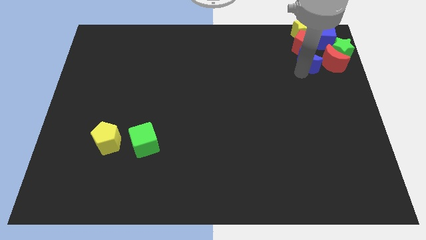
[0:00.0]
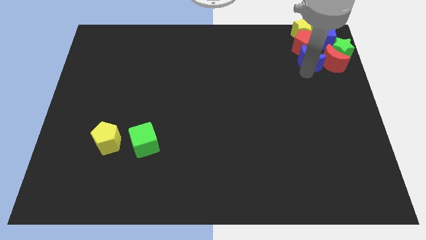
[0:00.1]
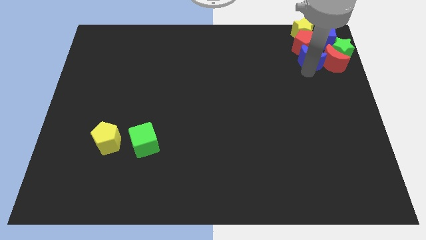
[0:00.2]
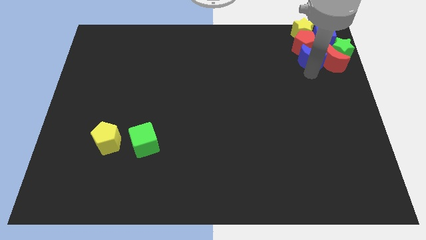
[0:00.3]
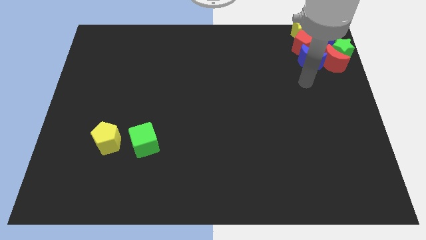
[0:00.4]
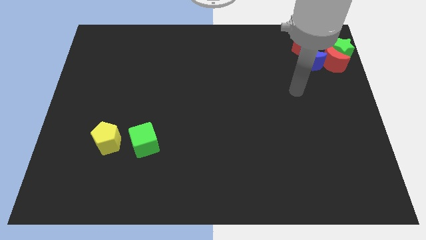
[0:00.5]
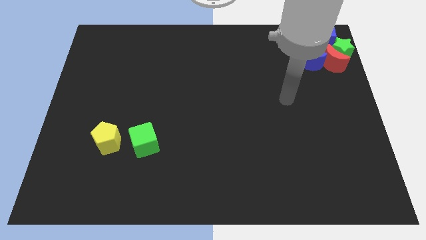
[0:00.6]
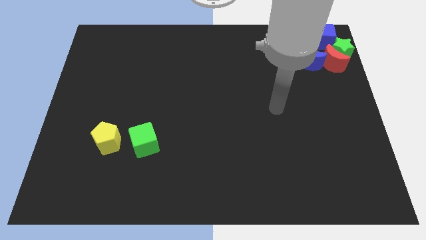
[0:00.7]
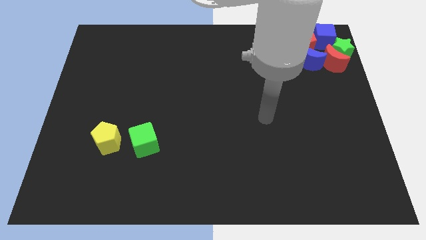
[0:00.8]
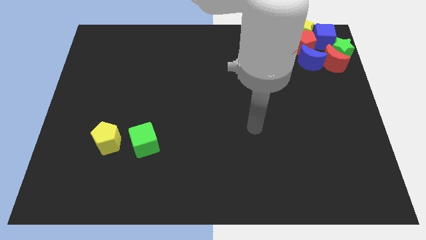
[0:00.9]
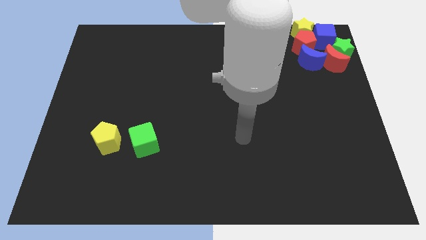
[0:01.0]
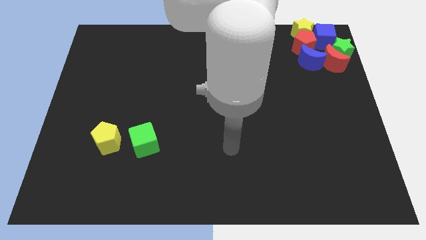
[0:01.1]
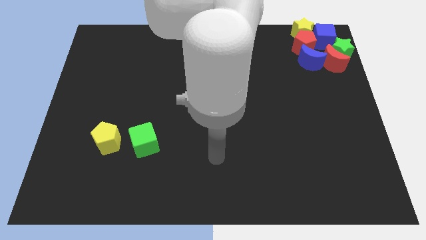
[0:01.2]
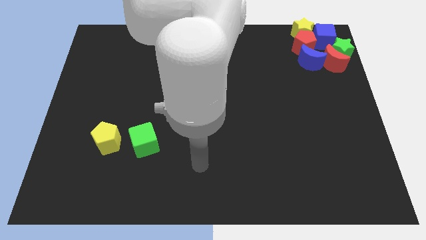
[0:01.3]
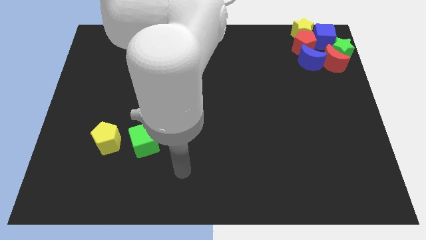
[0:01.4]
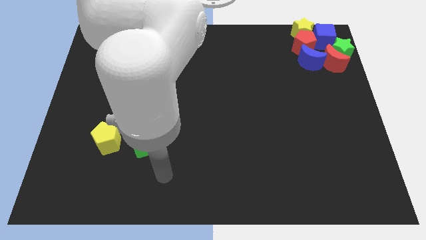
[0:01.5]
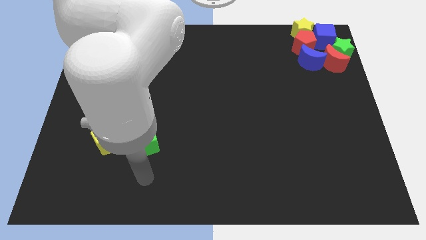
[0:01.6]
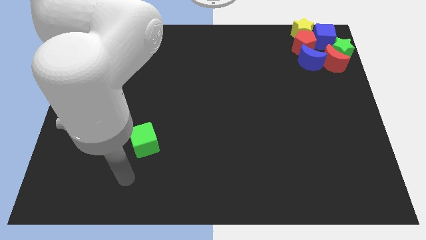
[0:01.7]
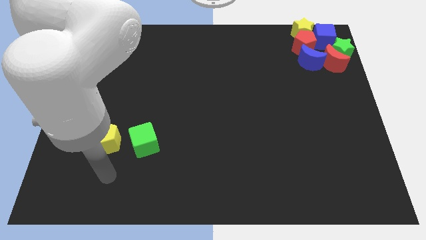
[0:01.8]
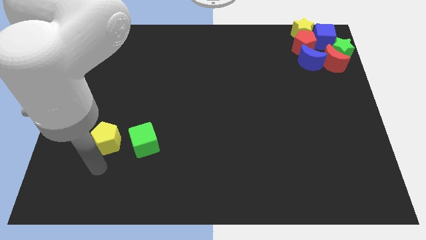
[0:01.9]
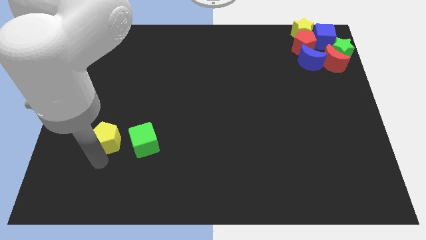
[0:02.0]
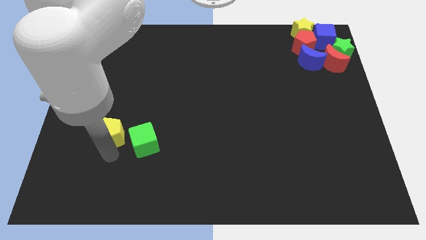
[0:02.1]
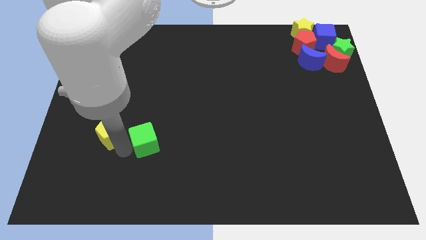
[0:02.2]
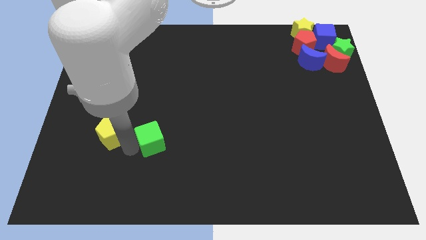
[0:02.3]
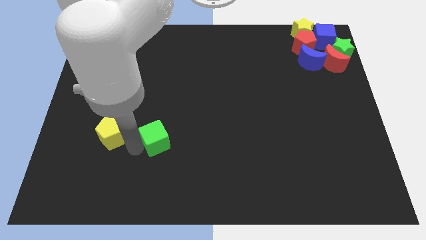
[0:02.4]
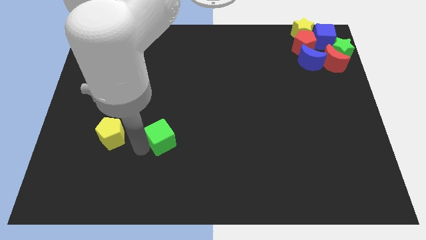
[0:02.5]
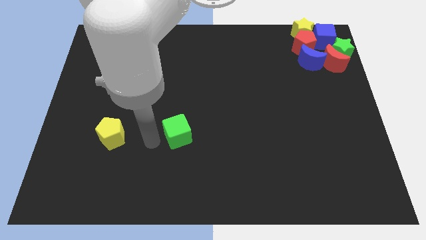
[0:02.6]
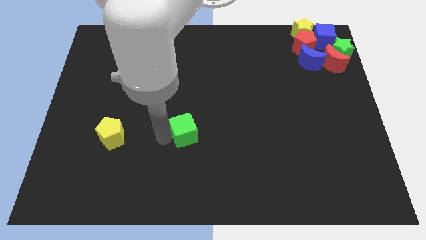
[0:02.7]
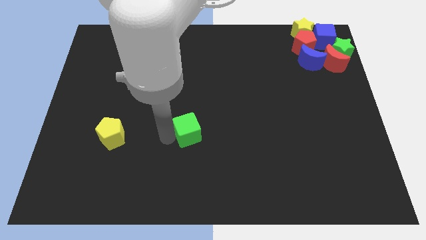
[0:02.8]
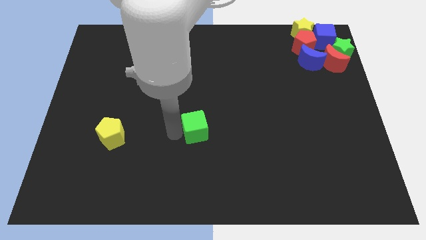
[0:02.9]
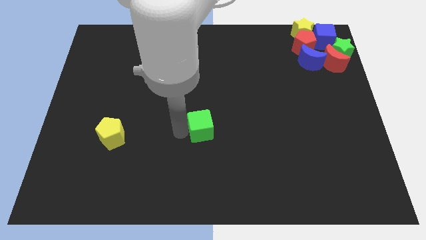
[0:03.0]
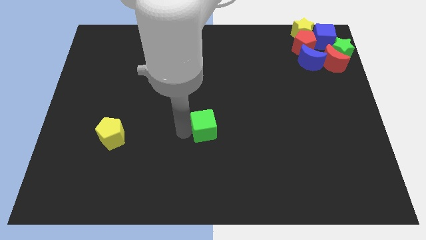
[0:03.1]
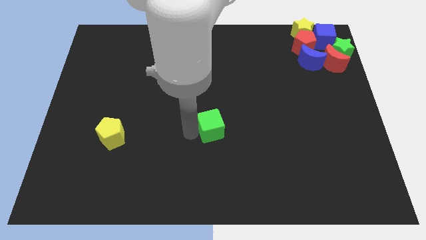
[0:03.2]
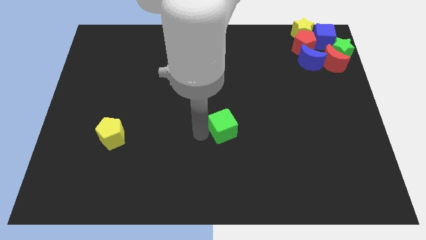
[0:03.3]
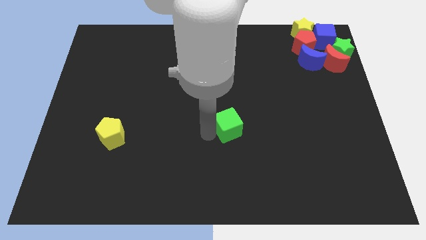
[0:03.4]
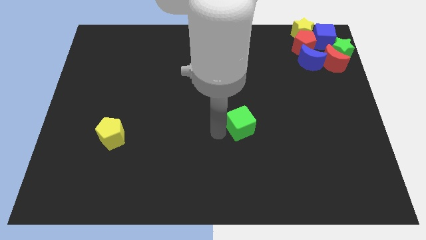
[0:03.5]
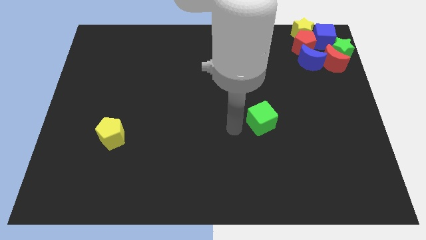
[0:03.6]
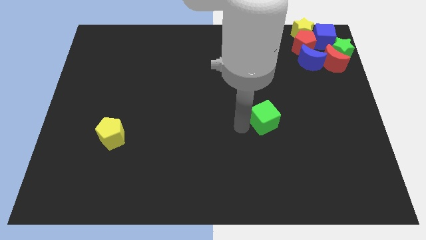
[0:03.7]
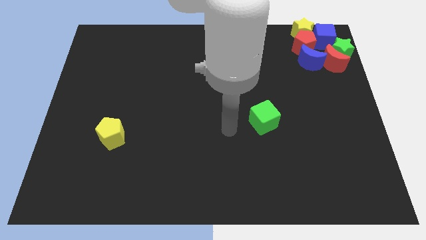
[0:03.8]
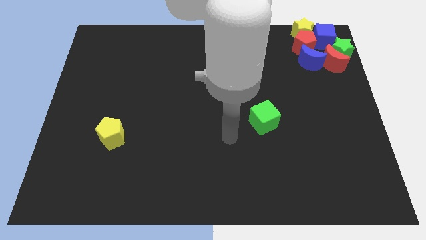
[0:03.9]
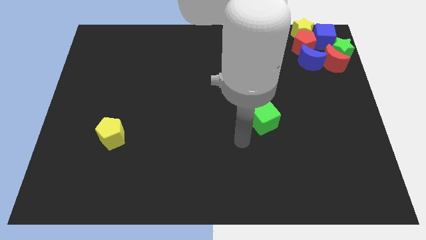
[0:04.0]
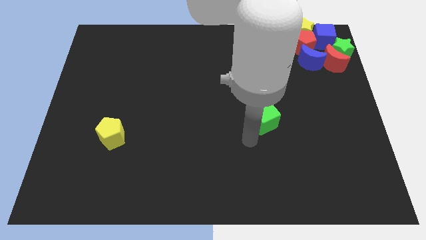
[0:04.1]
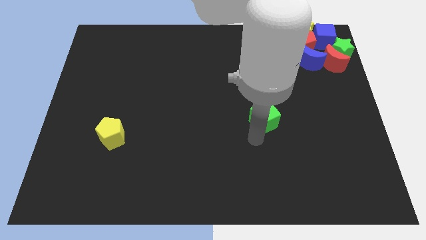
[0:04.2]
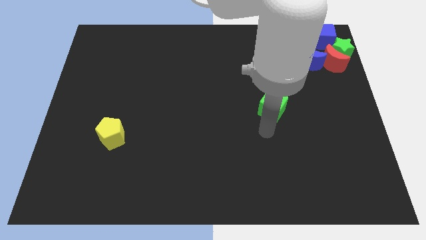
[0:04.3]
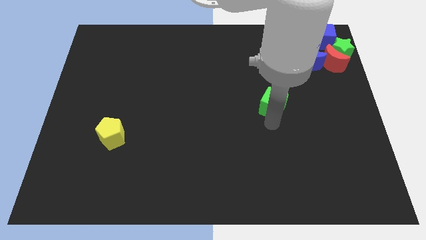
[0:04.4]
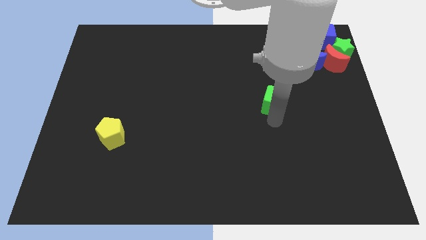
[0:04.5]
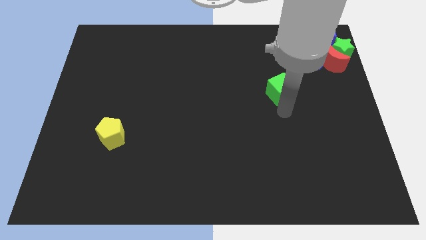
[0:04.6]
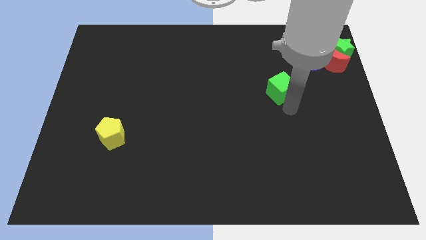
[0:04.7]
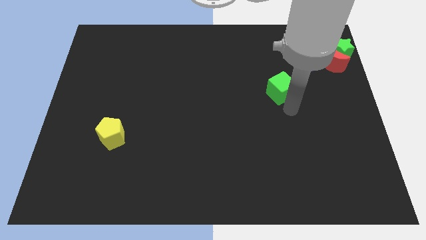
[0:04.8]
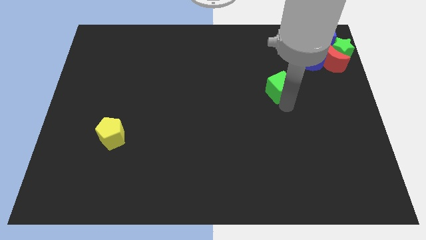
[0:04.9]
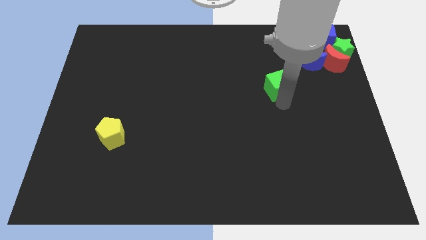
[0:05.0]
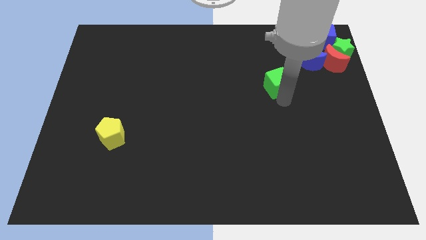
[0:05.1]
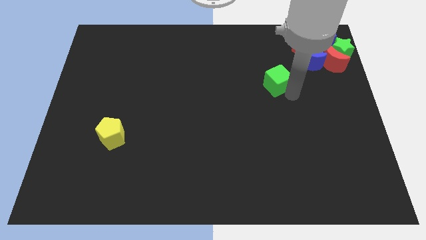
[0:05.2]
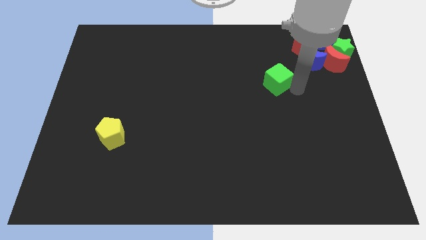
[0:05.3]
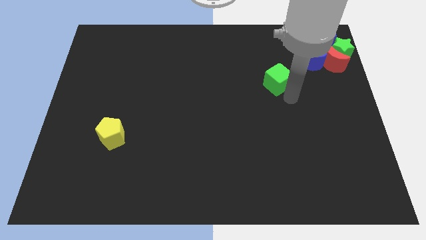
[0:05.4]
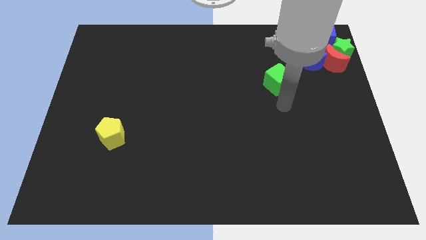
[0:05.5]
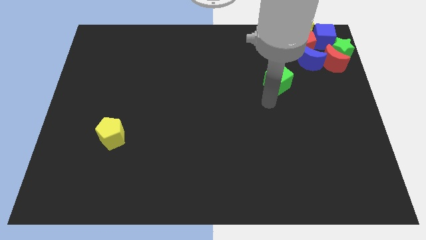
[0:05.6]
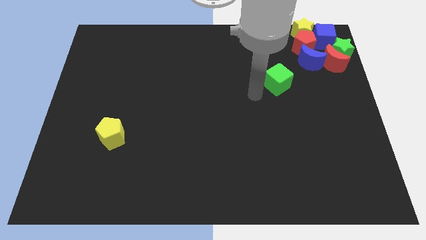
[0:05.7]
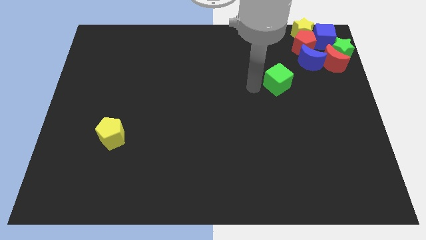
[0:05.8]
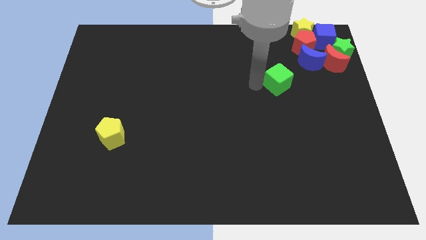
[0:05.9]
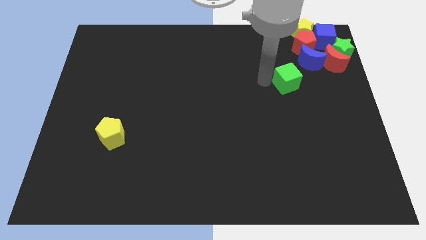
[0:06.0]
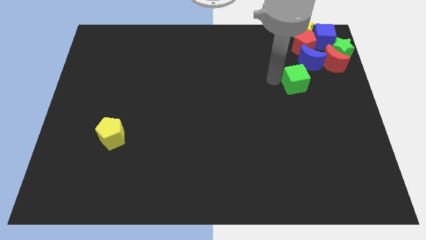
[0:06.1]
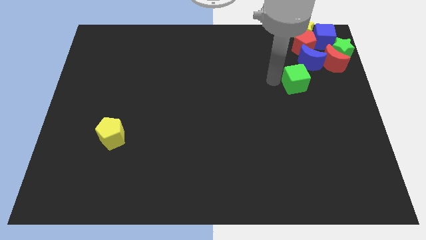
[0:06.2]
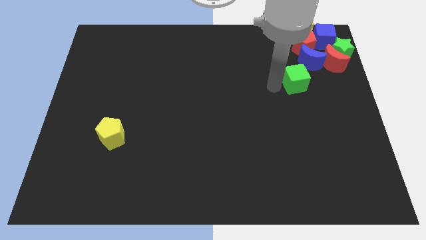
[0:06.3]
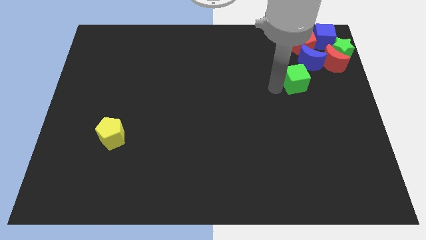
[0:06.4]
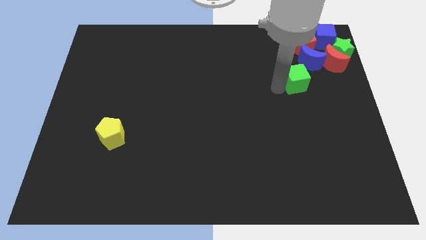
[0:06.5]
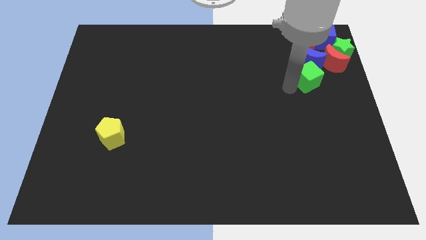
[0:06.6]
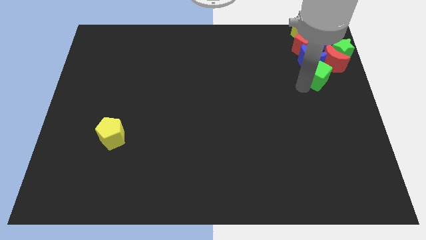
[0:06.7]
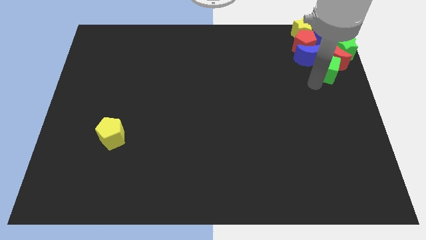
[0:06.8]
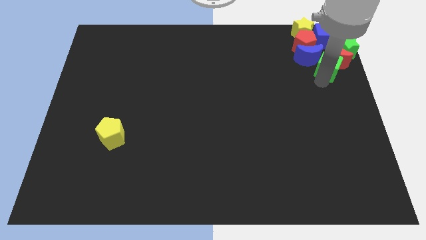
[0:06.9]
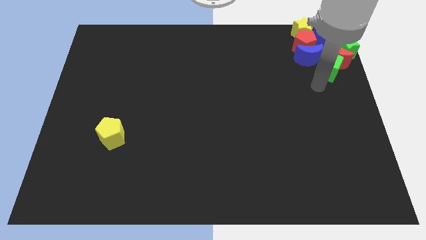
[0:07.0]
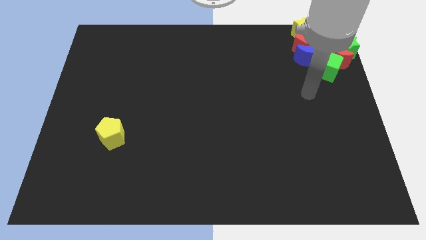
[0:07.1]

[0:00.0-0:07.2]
move the green cube near to the red block slightly top right of the board

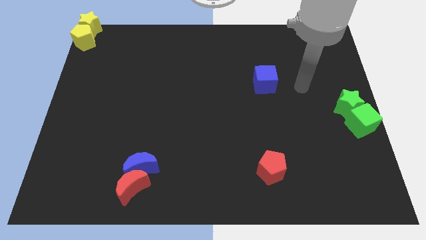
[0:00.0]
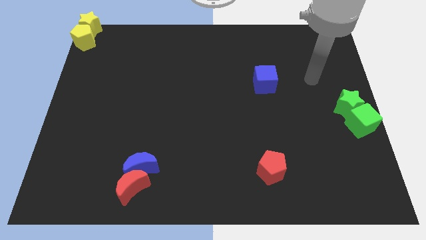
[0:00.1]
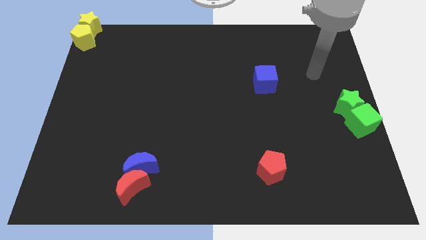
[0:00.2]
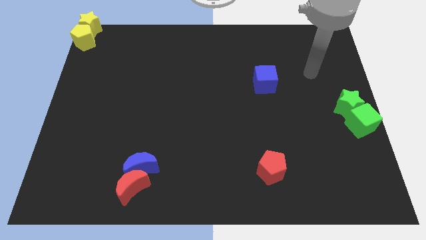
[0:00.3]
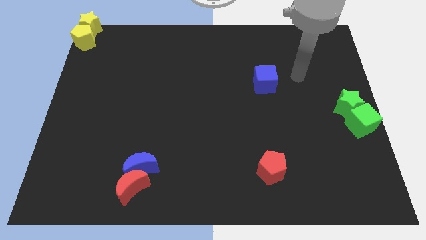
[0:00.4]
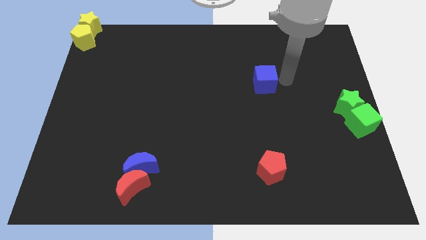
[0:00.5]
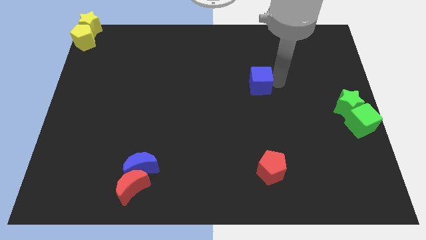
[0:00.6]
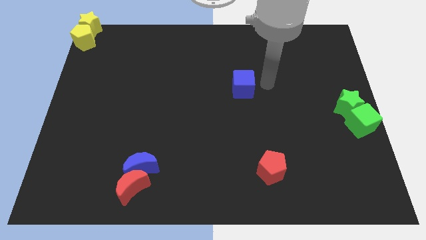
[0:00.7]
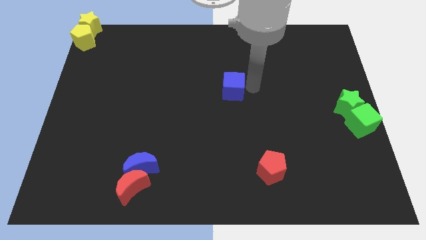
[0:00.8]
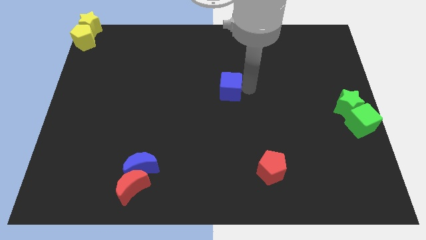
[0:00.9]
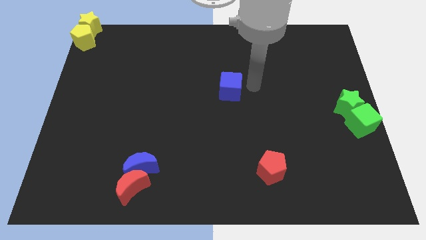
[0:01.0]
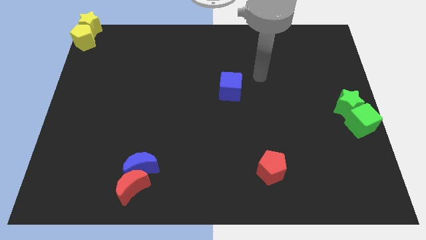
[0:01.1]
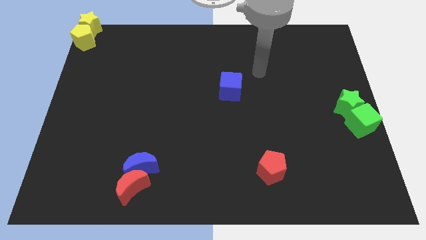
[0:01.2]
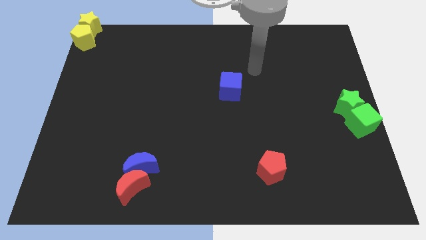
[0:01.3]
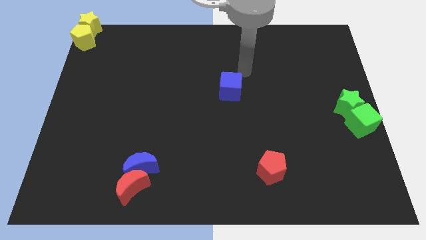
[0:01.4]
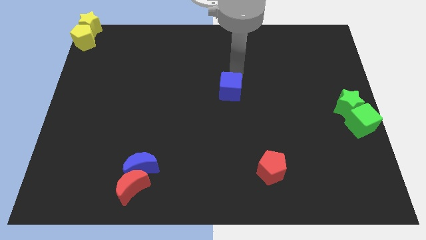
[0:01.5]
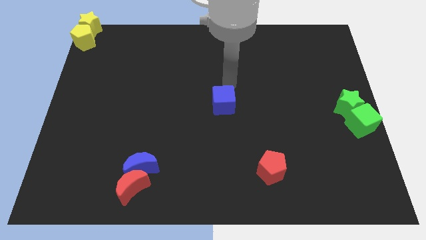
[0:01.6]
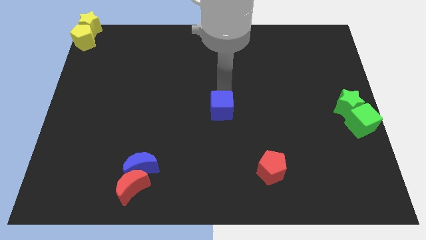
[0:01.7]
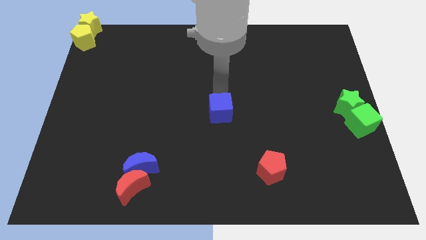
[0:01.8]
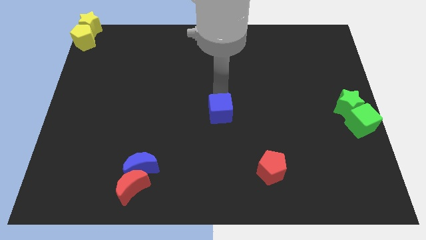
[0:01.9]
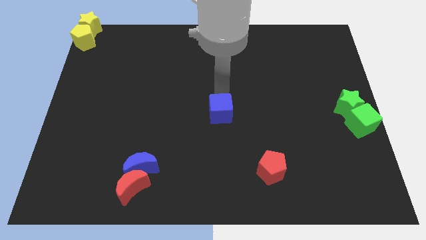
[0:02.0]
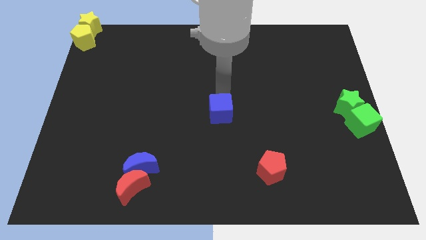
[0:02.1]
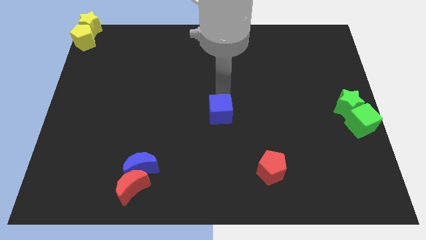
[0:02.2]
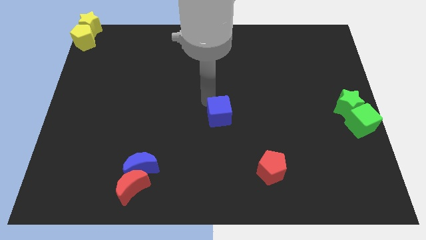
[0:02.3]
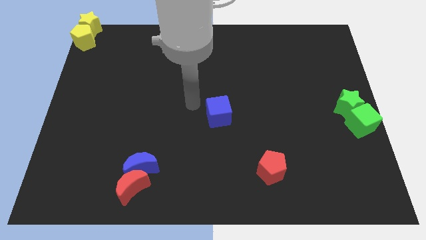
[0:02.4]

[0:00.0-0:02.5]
push blue cube slightly towards down beside green star
